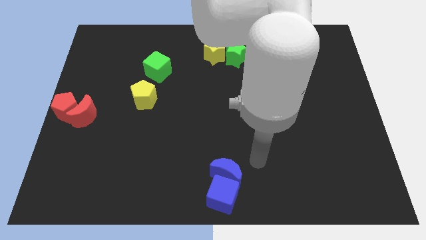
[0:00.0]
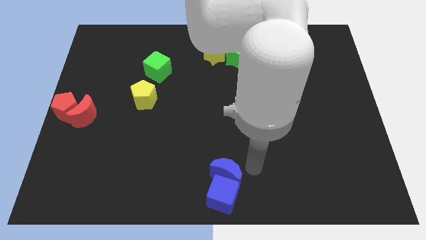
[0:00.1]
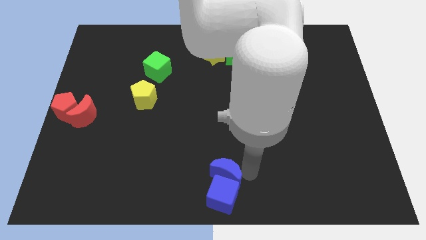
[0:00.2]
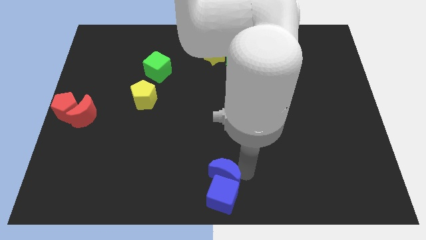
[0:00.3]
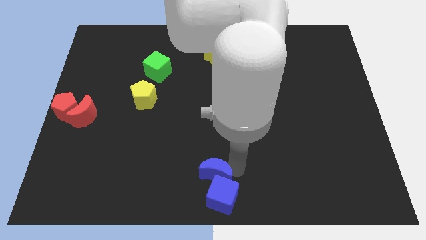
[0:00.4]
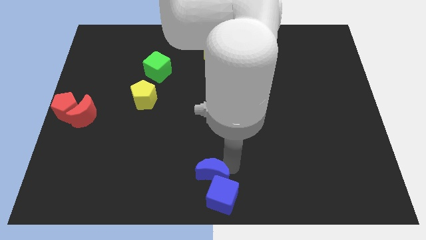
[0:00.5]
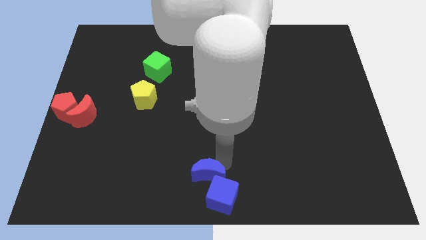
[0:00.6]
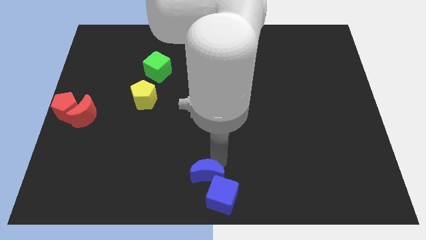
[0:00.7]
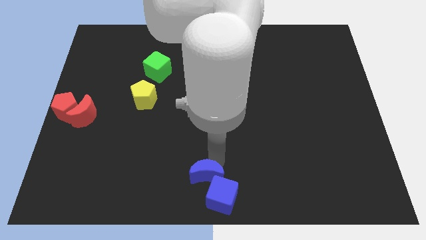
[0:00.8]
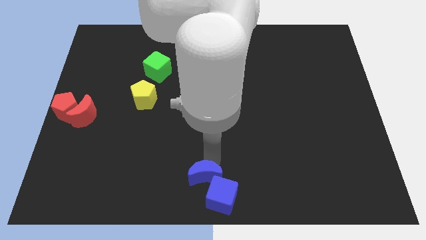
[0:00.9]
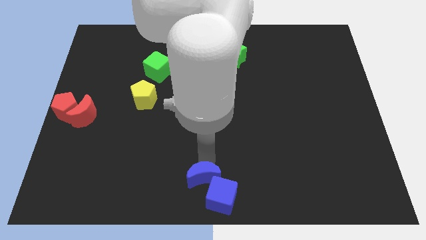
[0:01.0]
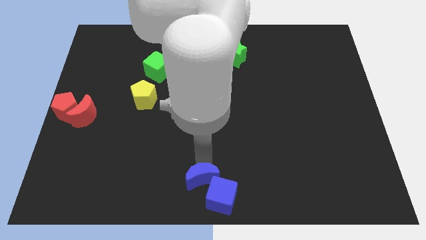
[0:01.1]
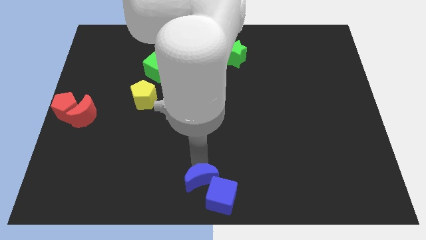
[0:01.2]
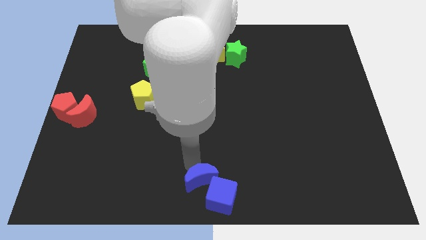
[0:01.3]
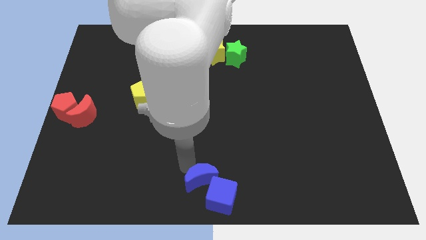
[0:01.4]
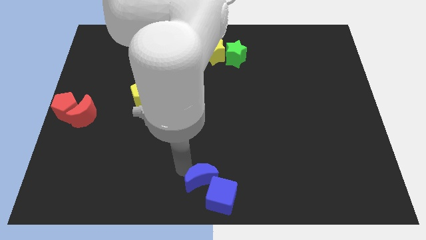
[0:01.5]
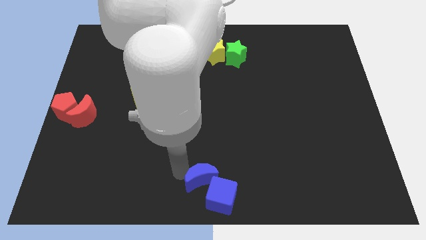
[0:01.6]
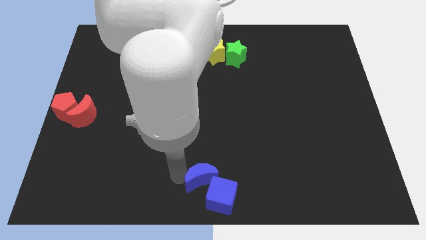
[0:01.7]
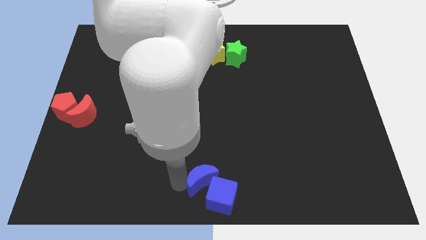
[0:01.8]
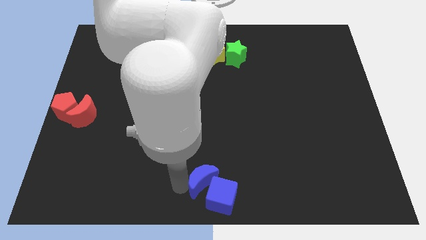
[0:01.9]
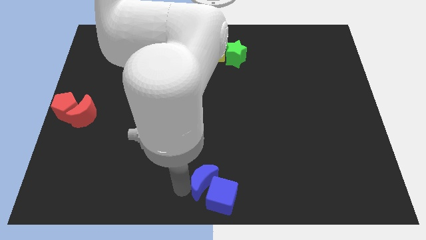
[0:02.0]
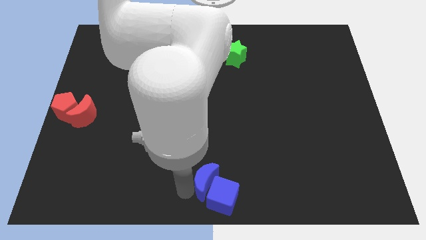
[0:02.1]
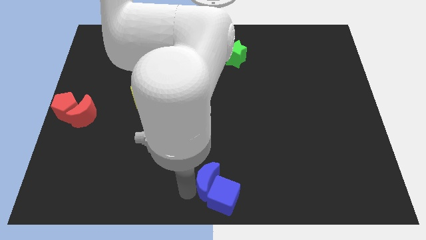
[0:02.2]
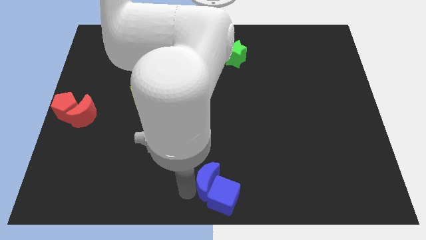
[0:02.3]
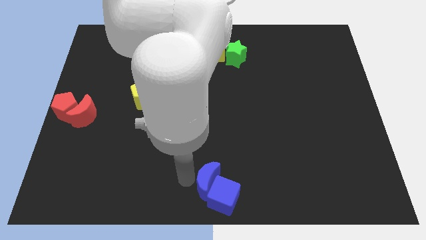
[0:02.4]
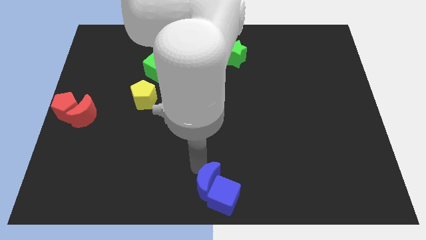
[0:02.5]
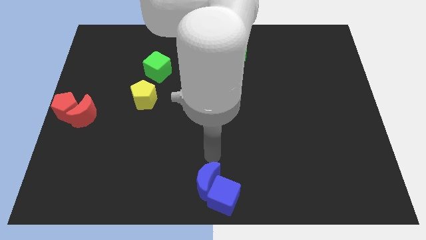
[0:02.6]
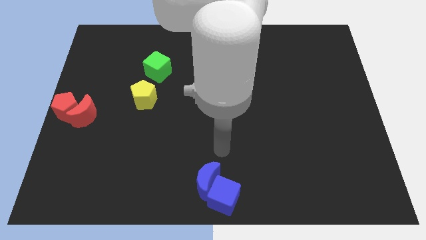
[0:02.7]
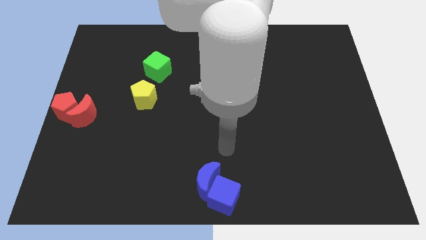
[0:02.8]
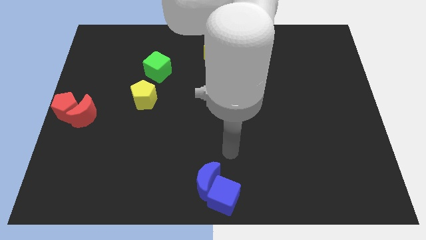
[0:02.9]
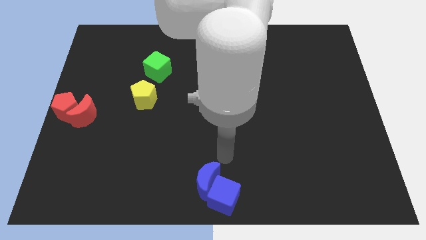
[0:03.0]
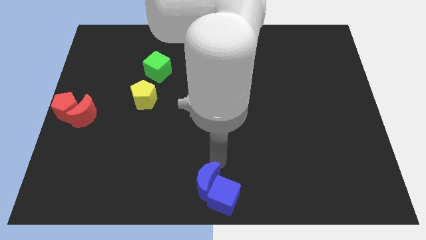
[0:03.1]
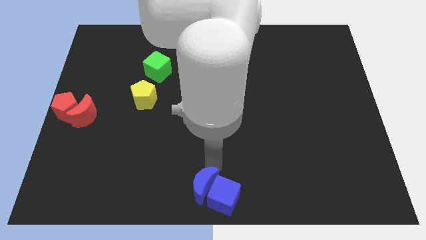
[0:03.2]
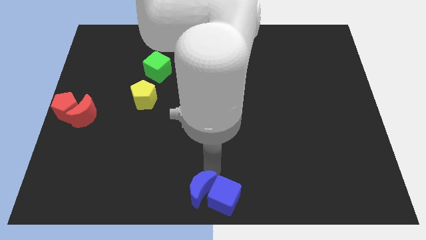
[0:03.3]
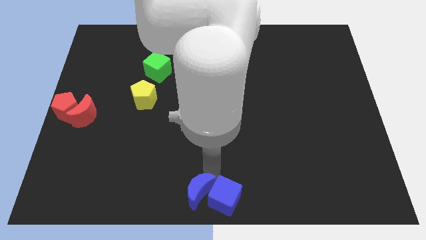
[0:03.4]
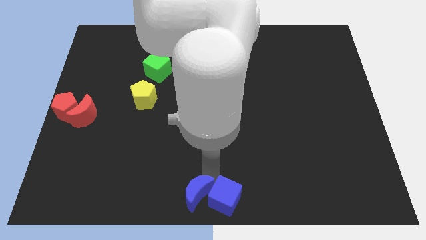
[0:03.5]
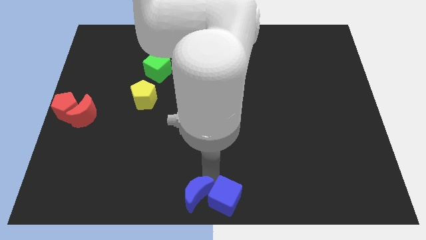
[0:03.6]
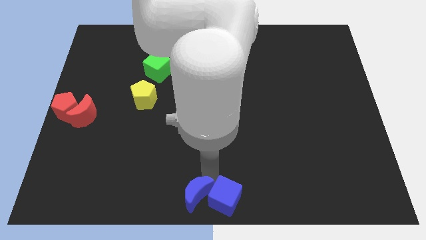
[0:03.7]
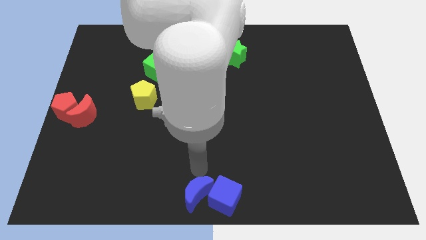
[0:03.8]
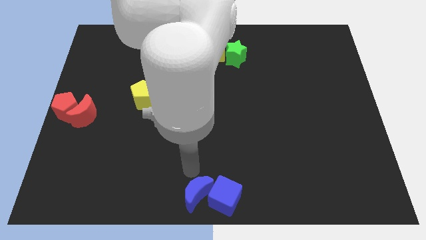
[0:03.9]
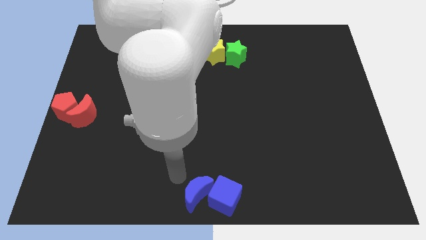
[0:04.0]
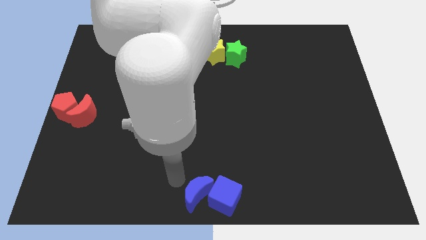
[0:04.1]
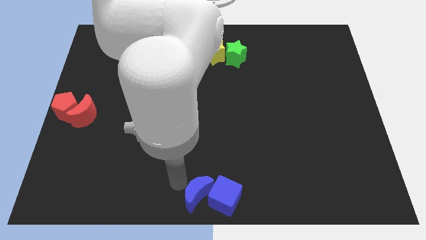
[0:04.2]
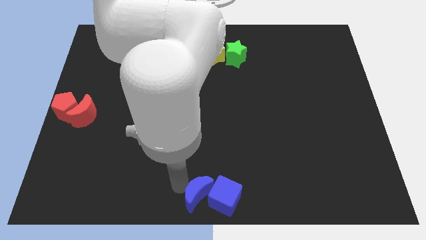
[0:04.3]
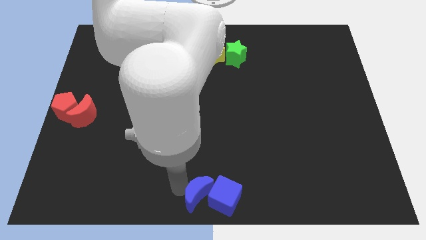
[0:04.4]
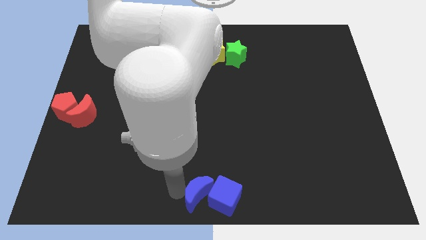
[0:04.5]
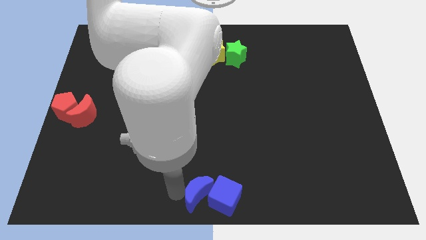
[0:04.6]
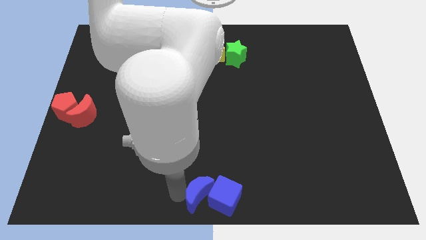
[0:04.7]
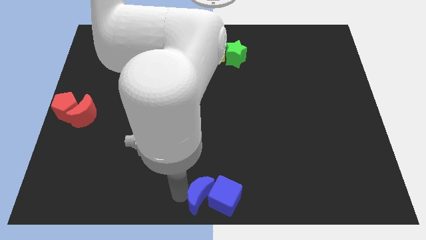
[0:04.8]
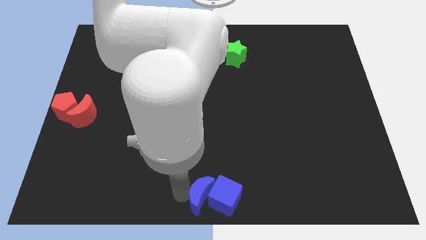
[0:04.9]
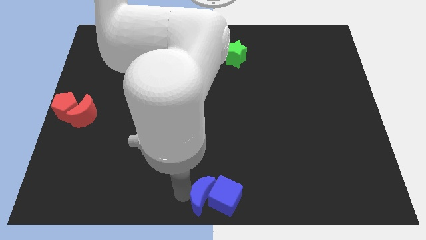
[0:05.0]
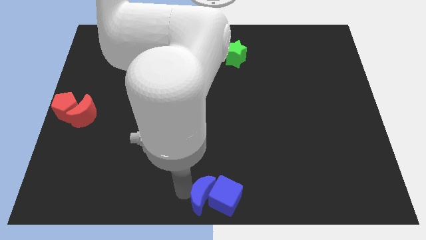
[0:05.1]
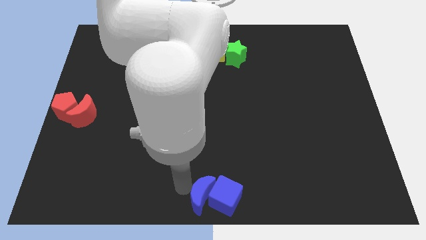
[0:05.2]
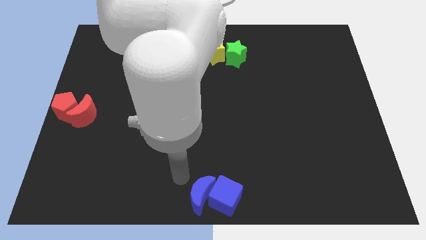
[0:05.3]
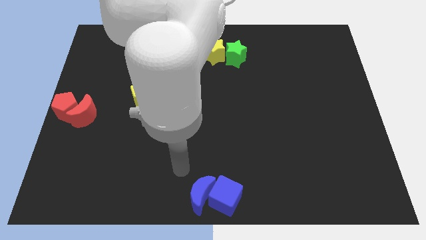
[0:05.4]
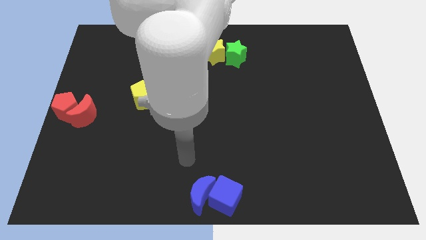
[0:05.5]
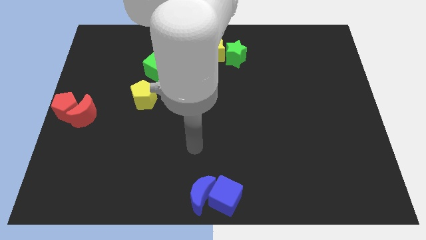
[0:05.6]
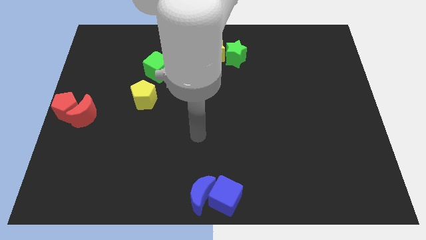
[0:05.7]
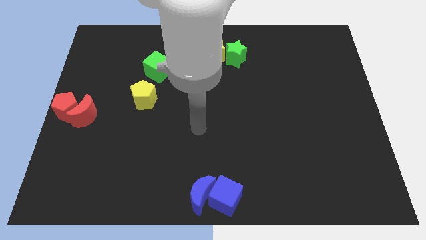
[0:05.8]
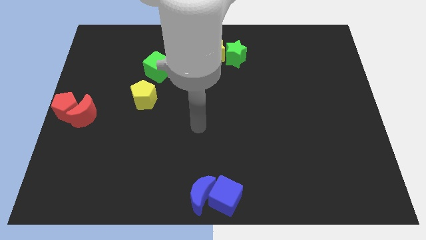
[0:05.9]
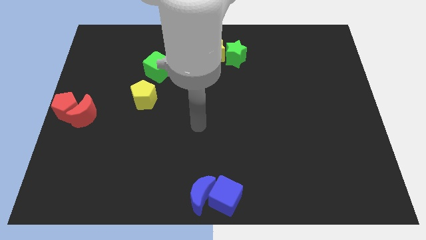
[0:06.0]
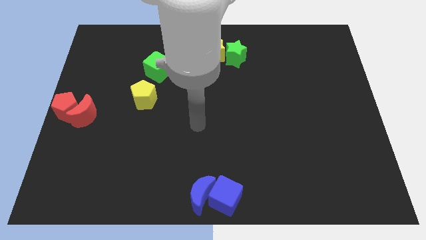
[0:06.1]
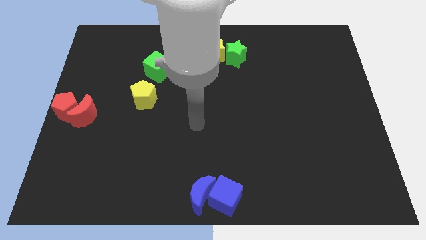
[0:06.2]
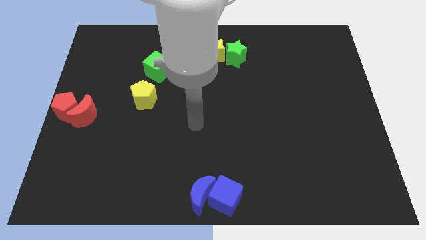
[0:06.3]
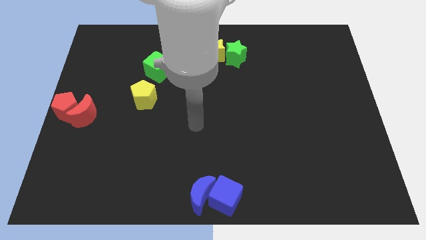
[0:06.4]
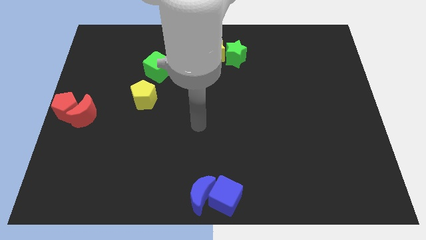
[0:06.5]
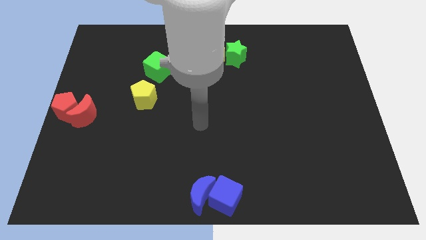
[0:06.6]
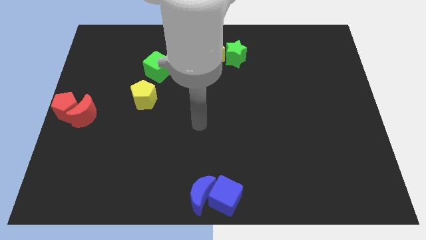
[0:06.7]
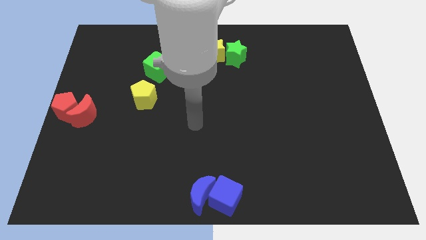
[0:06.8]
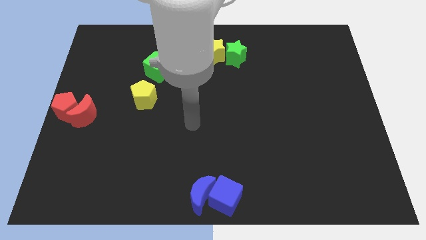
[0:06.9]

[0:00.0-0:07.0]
place blue moon to the bottom center of the board

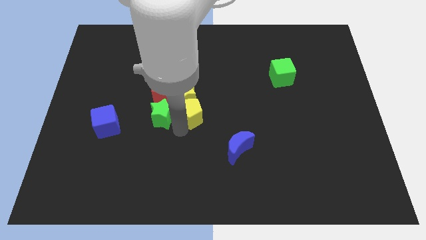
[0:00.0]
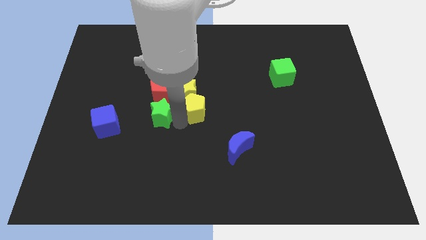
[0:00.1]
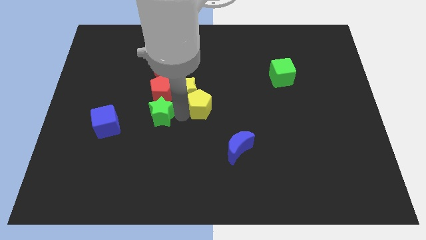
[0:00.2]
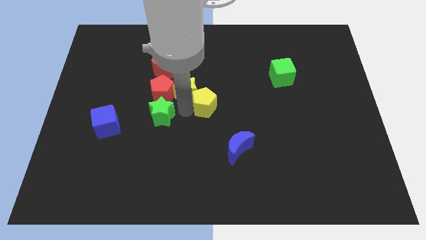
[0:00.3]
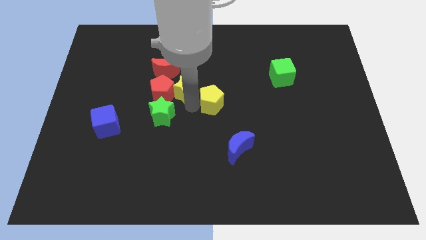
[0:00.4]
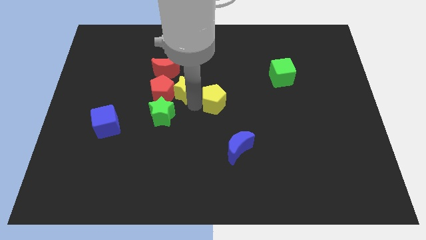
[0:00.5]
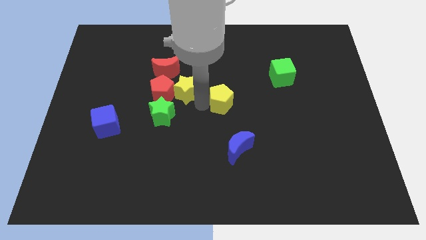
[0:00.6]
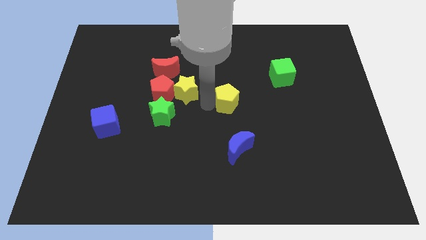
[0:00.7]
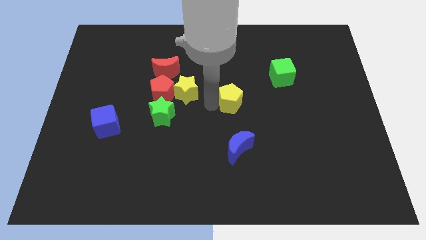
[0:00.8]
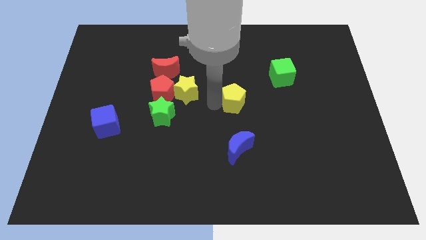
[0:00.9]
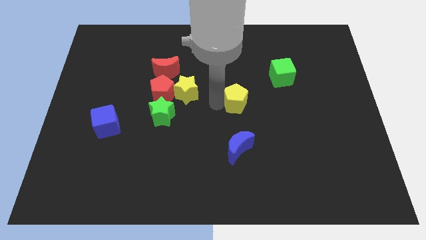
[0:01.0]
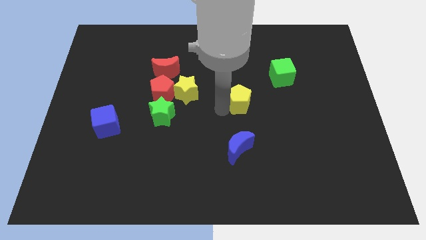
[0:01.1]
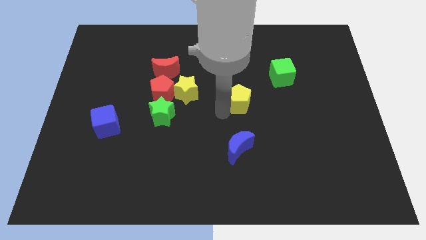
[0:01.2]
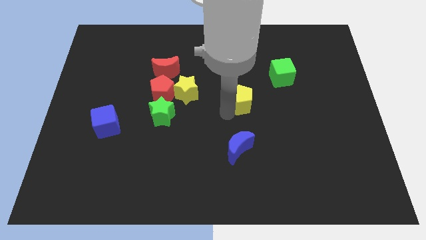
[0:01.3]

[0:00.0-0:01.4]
separate yellow pentagon from the yellow star

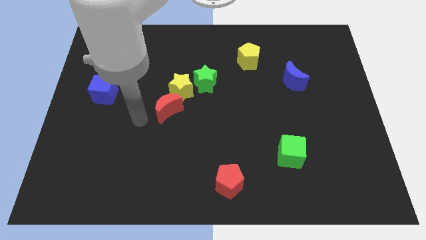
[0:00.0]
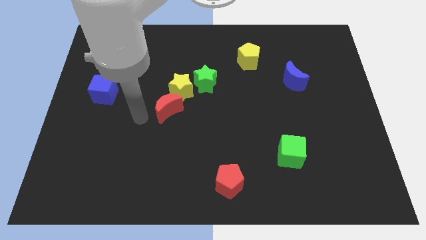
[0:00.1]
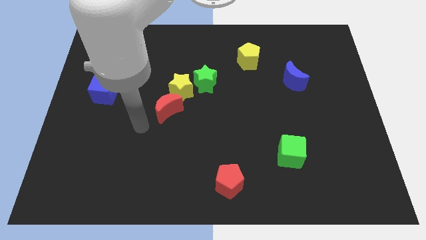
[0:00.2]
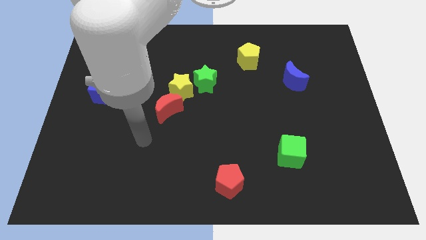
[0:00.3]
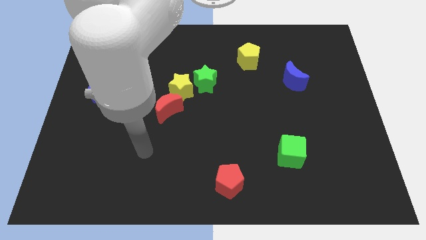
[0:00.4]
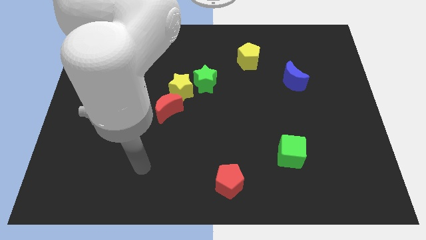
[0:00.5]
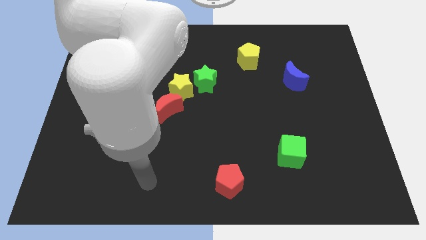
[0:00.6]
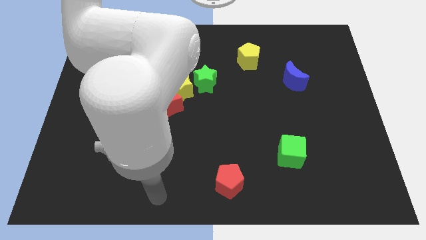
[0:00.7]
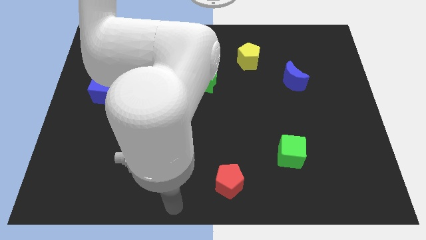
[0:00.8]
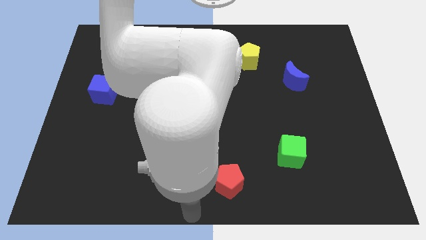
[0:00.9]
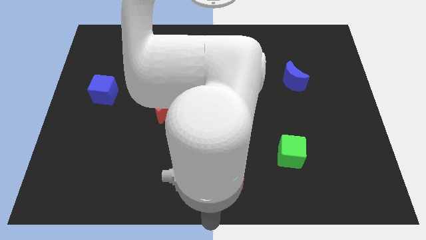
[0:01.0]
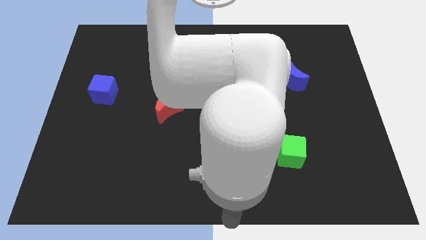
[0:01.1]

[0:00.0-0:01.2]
place your hand vertically below the red pentagon
